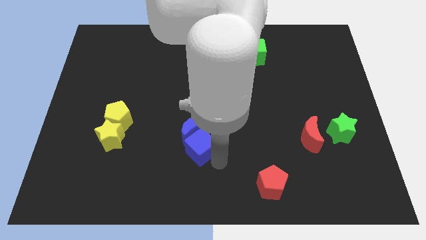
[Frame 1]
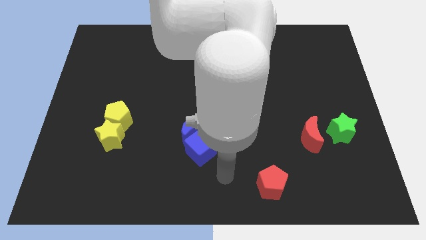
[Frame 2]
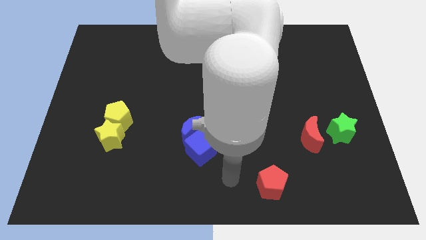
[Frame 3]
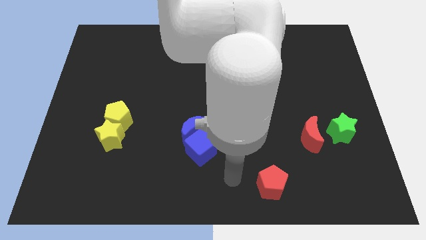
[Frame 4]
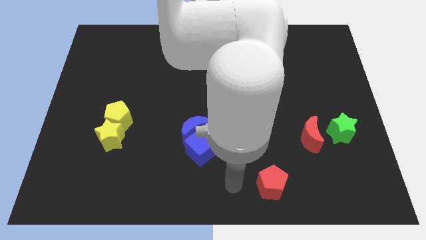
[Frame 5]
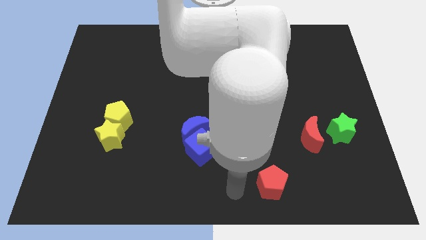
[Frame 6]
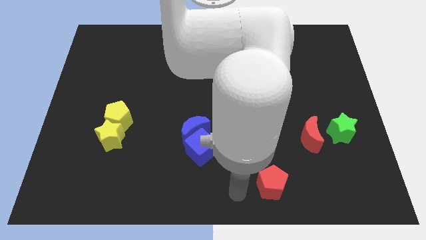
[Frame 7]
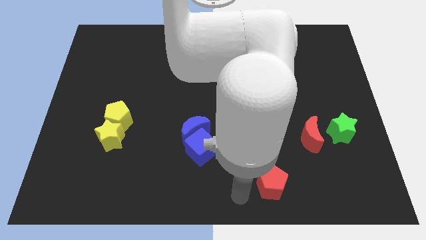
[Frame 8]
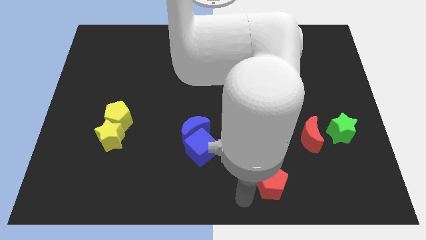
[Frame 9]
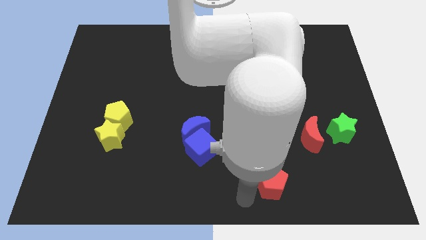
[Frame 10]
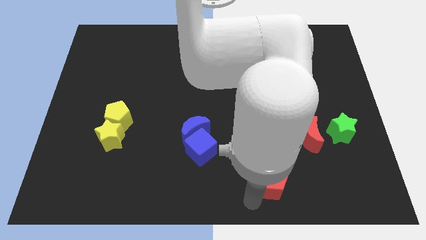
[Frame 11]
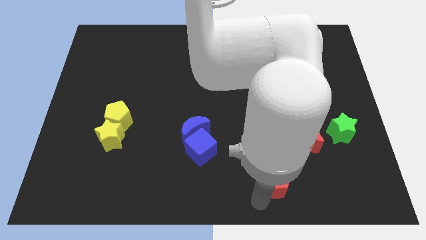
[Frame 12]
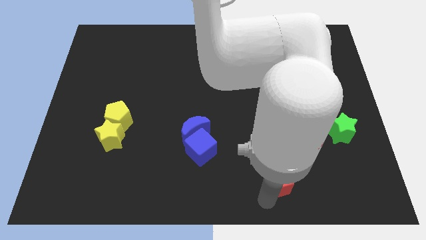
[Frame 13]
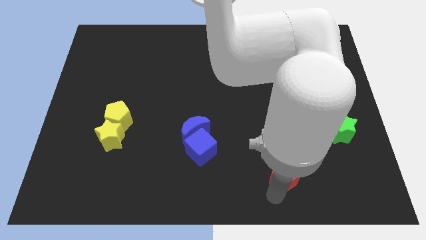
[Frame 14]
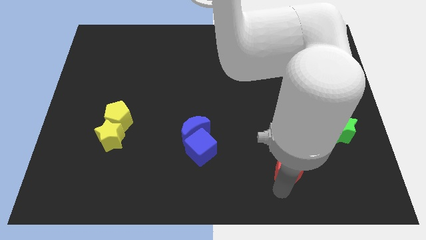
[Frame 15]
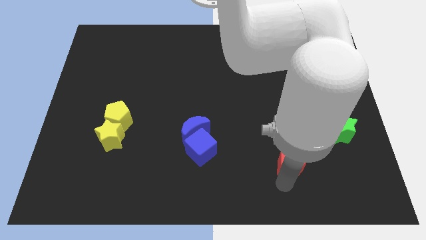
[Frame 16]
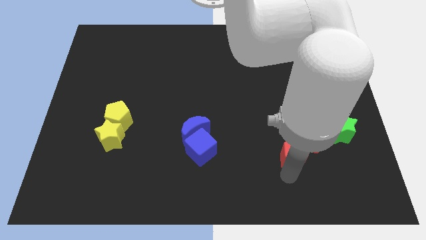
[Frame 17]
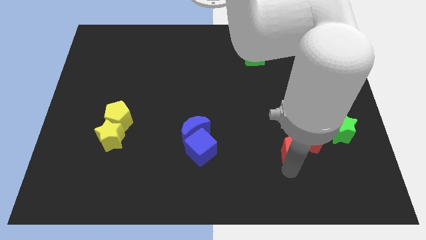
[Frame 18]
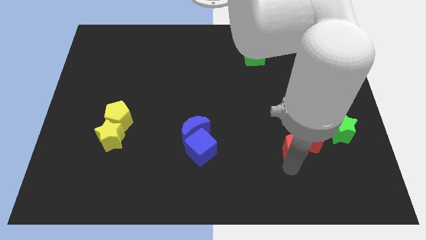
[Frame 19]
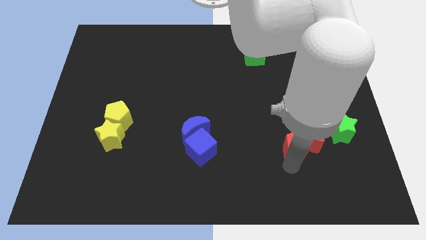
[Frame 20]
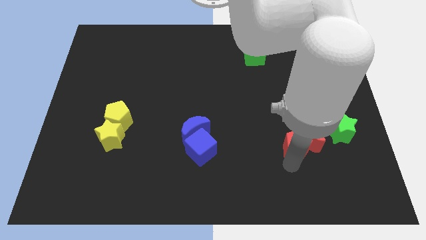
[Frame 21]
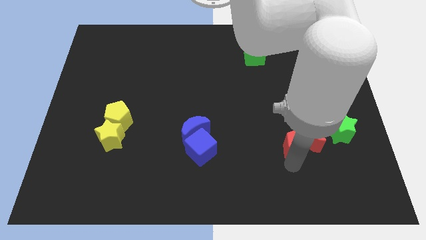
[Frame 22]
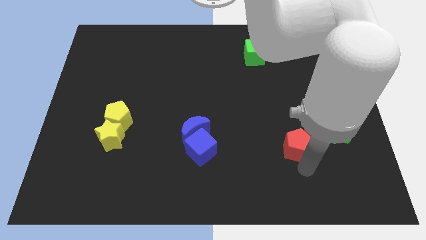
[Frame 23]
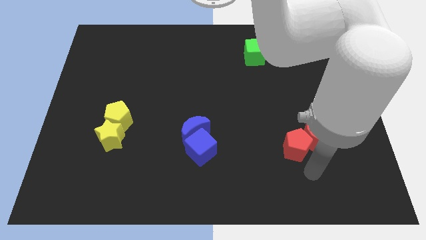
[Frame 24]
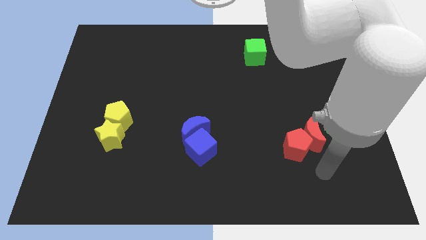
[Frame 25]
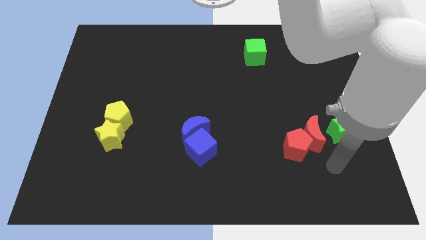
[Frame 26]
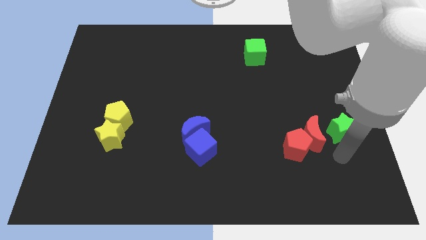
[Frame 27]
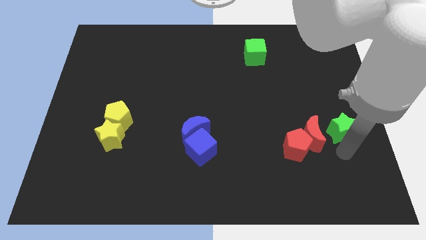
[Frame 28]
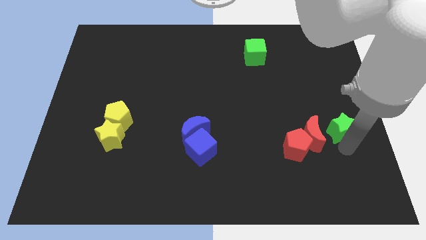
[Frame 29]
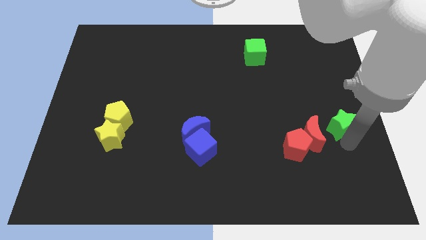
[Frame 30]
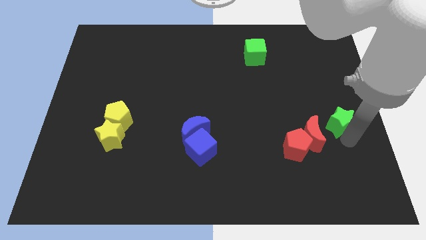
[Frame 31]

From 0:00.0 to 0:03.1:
move the red blocks to right

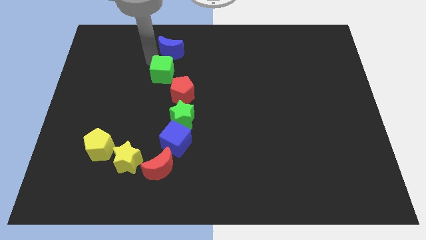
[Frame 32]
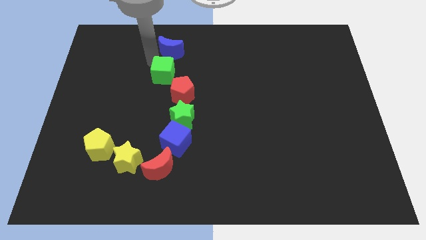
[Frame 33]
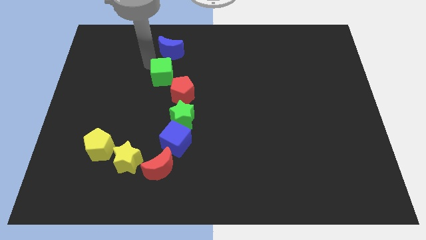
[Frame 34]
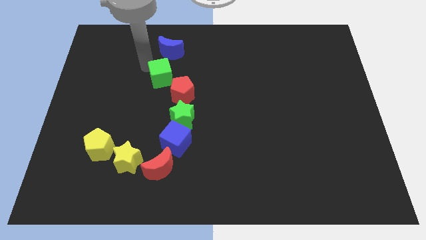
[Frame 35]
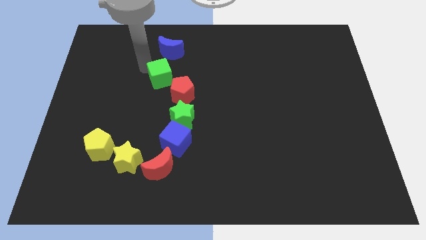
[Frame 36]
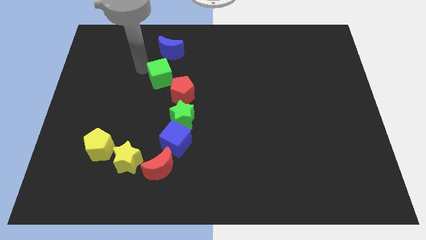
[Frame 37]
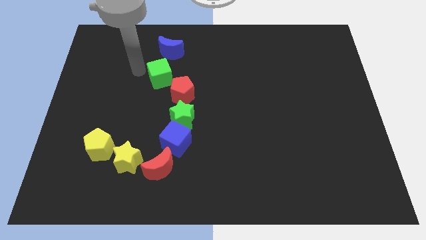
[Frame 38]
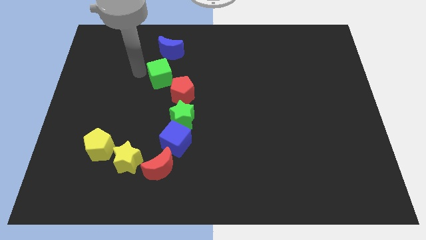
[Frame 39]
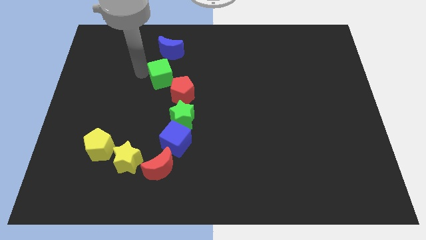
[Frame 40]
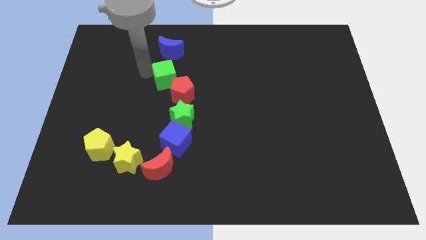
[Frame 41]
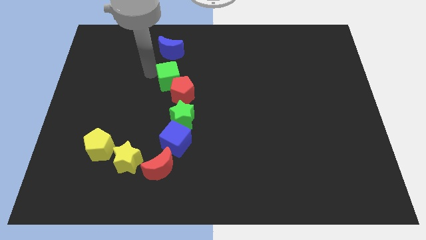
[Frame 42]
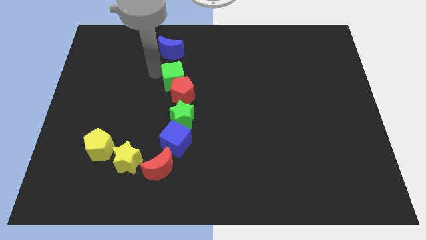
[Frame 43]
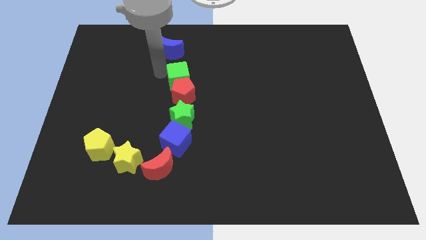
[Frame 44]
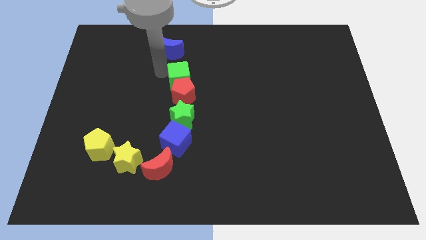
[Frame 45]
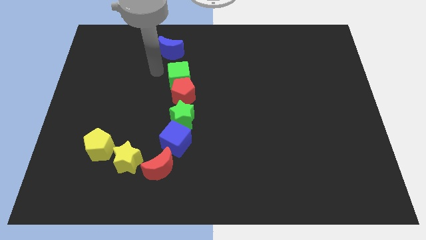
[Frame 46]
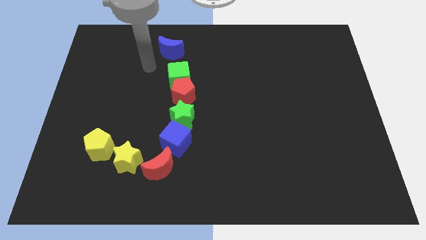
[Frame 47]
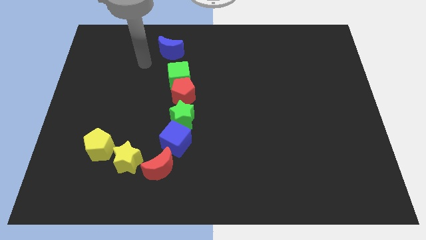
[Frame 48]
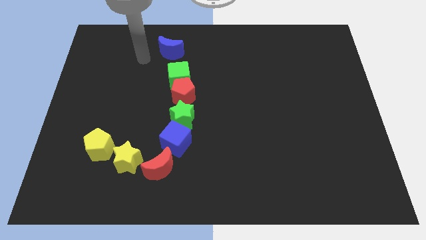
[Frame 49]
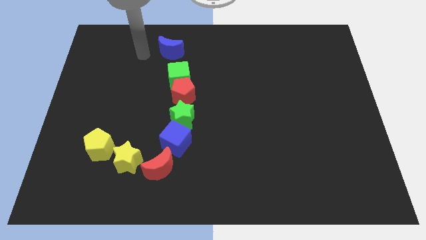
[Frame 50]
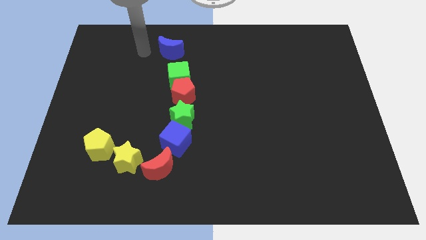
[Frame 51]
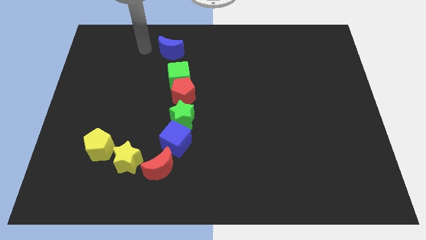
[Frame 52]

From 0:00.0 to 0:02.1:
move the green cube into the red pentagon

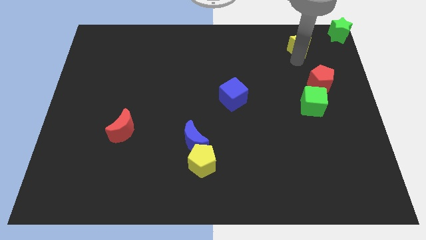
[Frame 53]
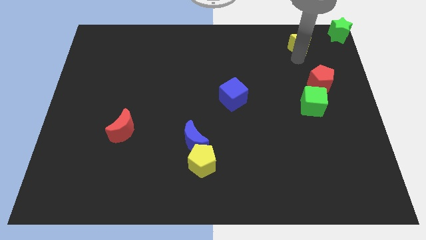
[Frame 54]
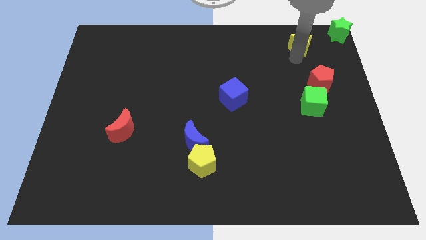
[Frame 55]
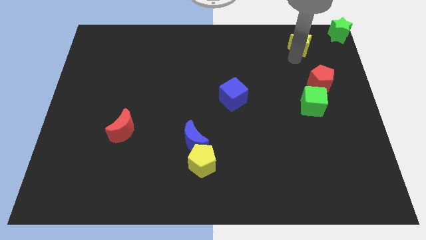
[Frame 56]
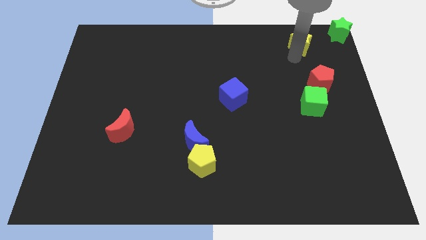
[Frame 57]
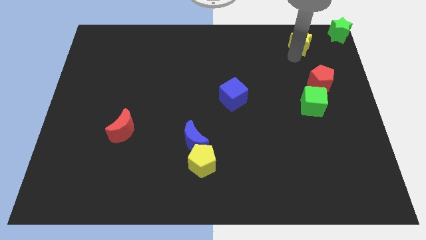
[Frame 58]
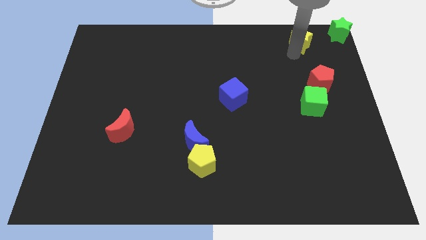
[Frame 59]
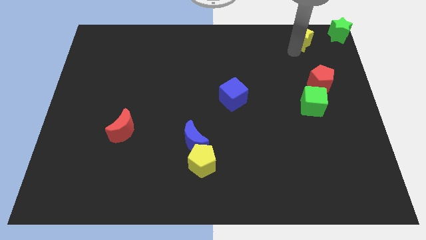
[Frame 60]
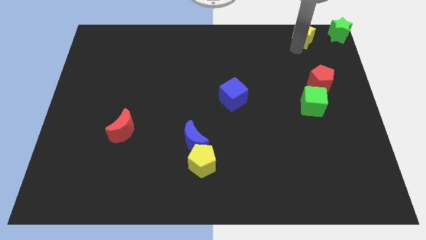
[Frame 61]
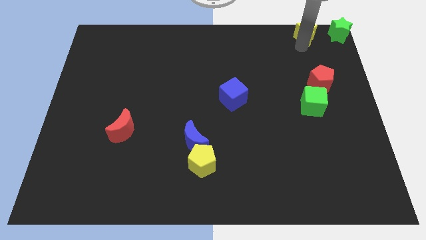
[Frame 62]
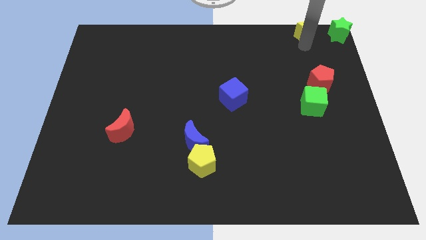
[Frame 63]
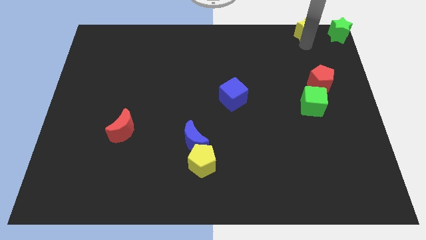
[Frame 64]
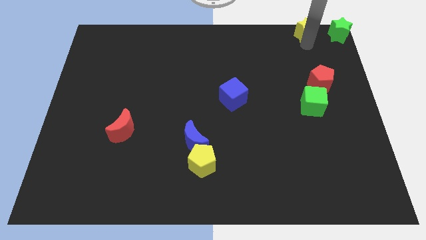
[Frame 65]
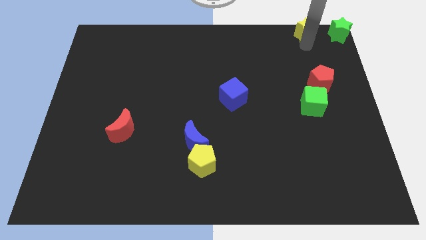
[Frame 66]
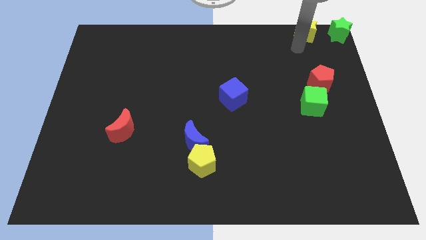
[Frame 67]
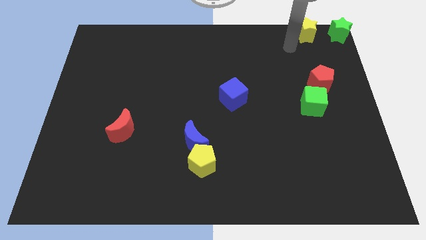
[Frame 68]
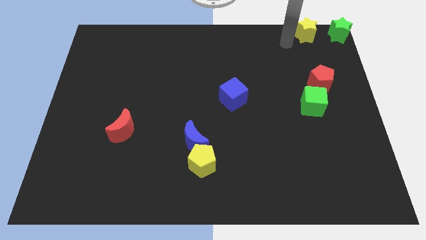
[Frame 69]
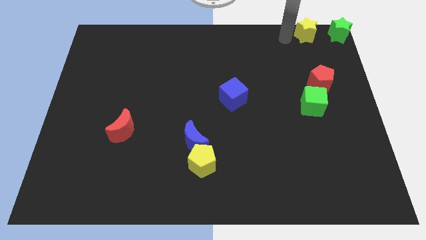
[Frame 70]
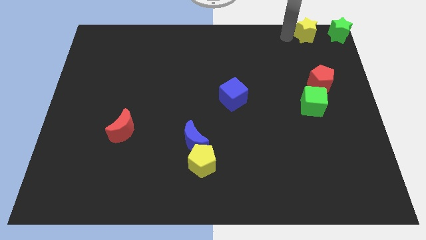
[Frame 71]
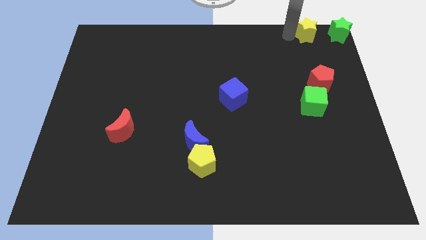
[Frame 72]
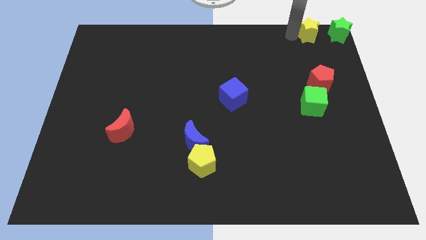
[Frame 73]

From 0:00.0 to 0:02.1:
put the yellow star to the left side of the green star

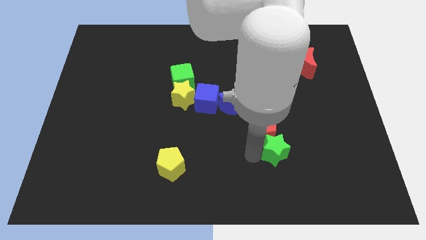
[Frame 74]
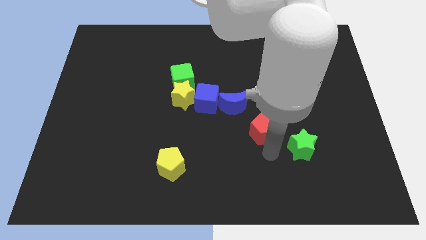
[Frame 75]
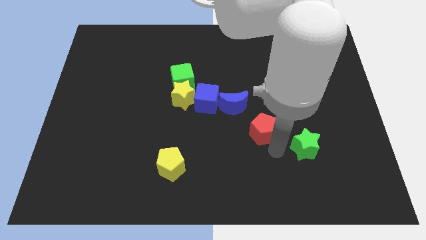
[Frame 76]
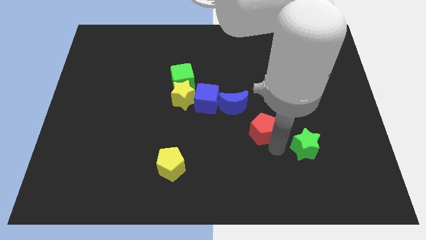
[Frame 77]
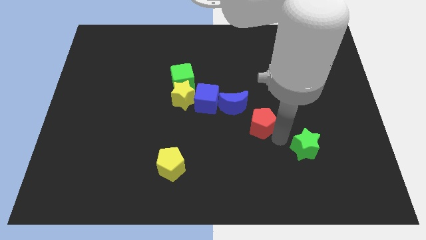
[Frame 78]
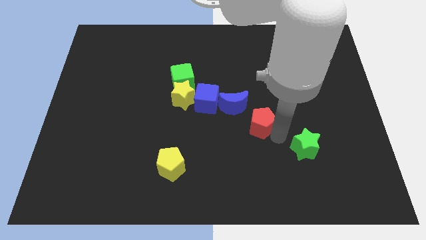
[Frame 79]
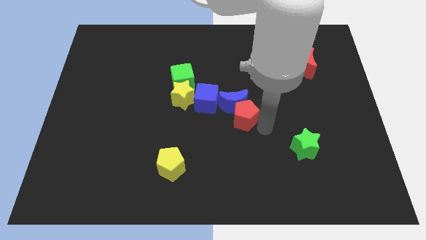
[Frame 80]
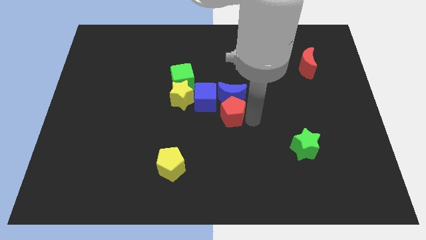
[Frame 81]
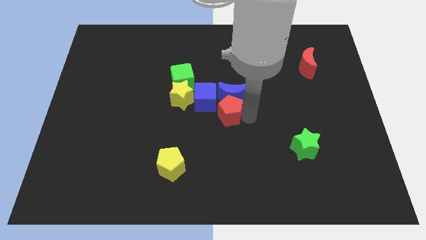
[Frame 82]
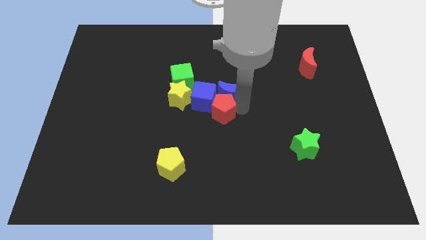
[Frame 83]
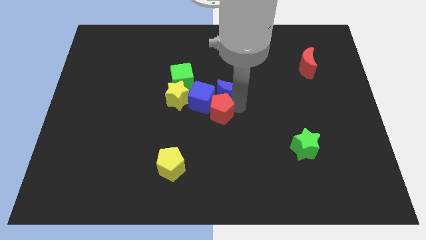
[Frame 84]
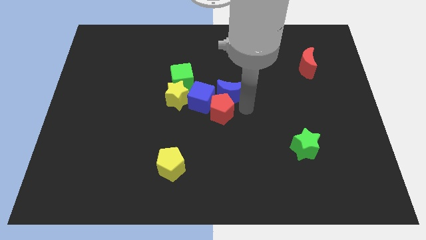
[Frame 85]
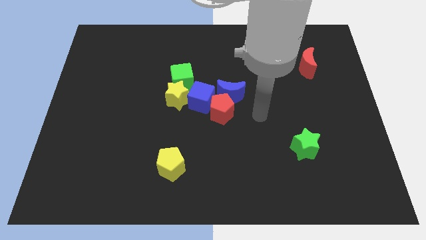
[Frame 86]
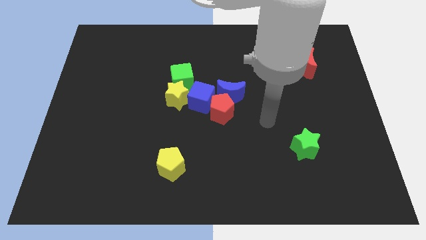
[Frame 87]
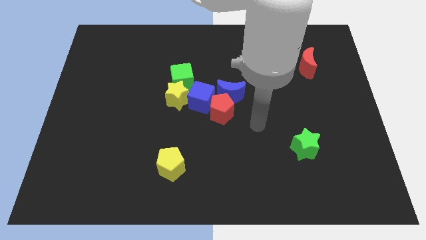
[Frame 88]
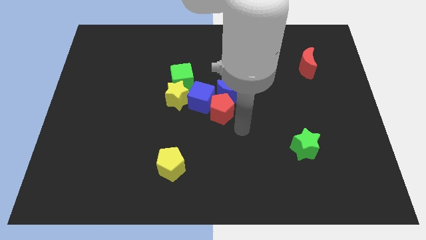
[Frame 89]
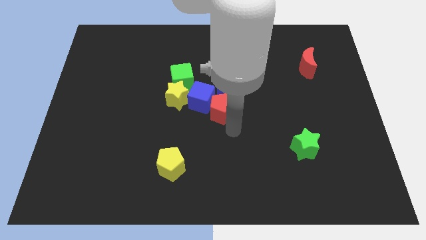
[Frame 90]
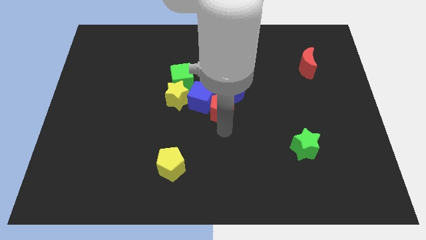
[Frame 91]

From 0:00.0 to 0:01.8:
place the red pentagon below the blue crescent
